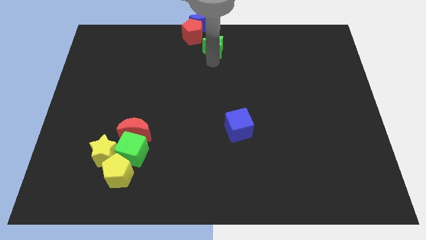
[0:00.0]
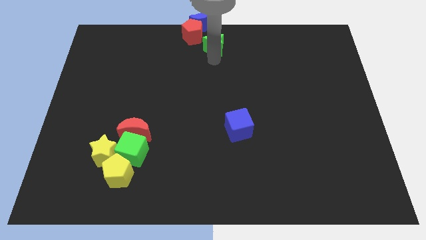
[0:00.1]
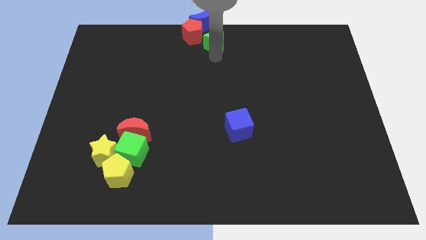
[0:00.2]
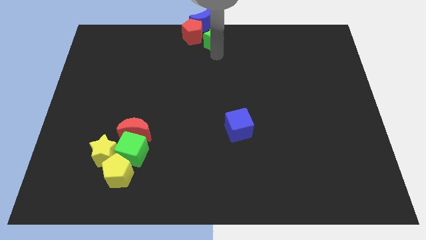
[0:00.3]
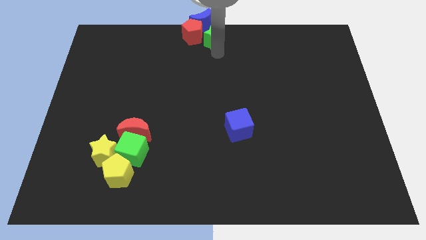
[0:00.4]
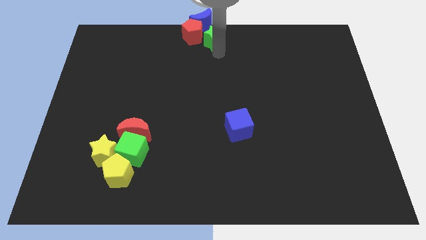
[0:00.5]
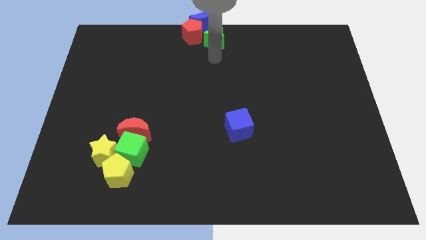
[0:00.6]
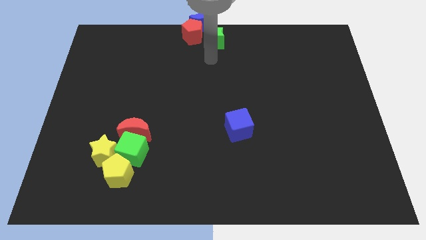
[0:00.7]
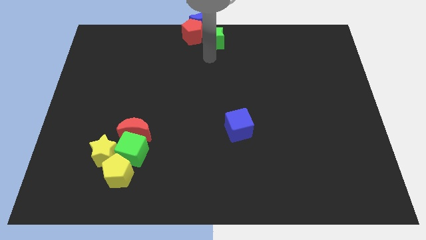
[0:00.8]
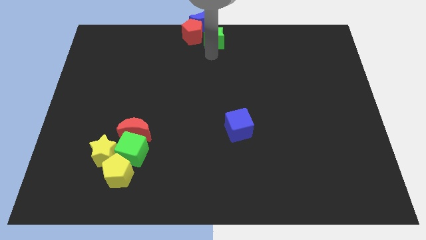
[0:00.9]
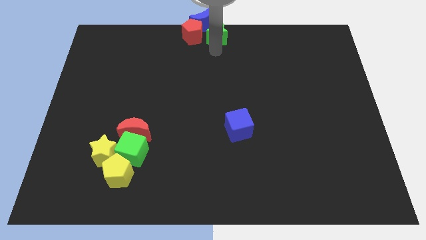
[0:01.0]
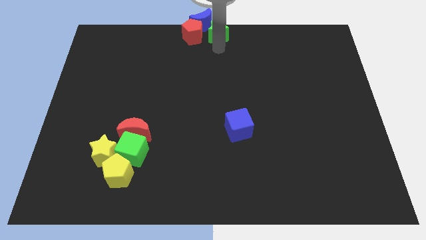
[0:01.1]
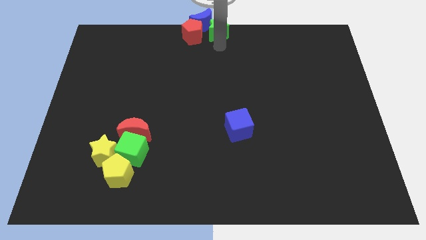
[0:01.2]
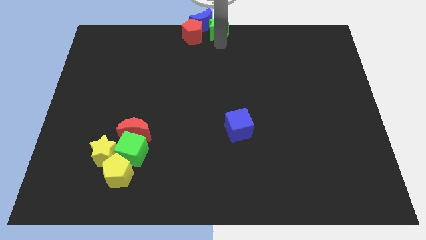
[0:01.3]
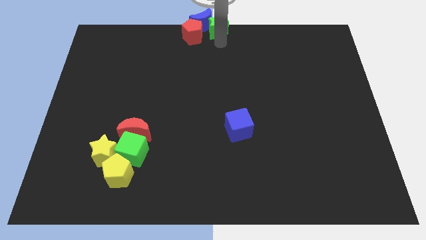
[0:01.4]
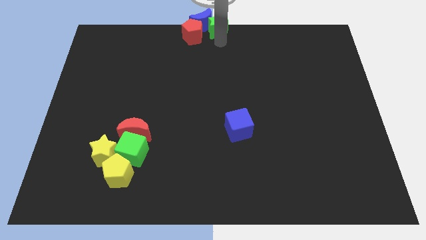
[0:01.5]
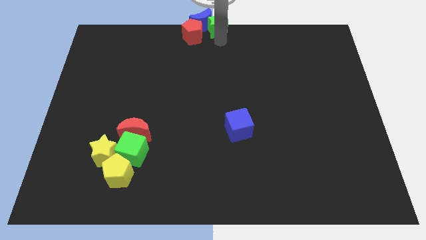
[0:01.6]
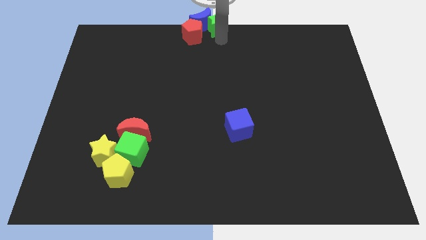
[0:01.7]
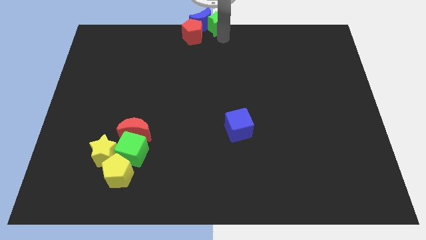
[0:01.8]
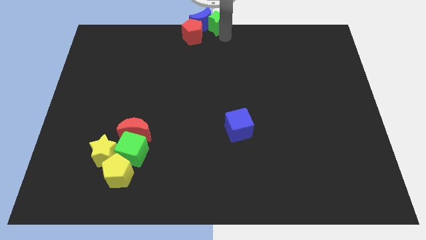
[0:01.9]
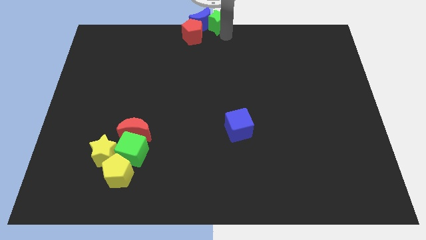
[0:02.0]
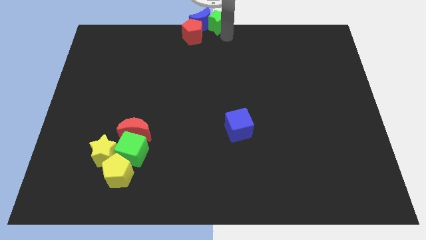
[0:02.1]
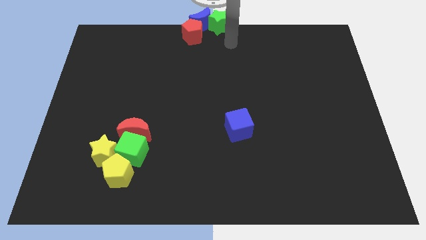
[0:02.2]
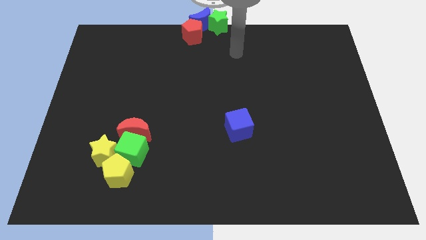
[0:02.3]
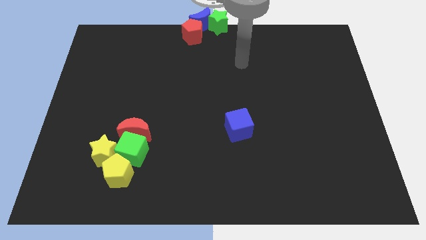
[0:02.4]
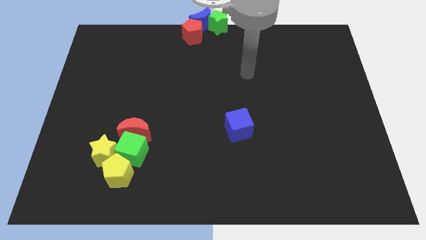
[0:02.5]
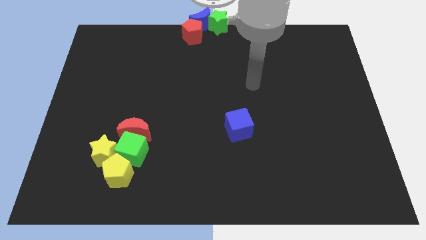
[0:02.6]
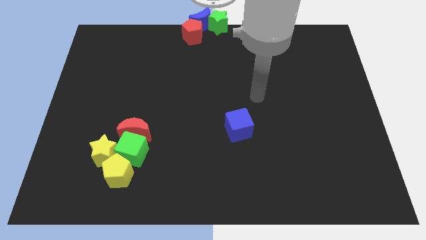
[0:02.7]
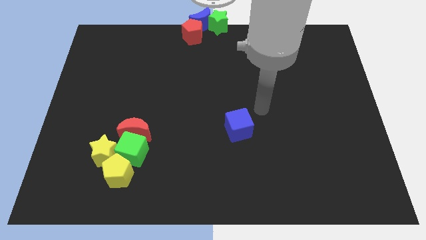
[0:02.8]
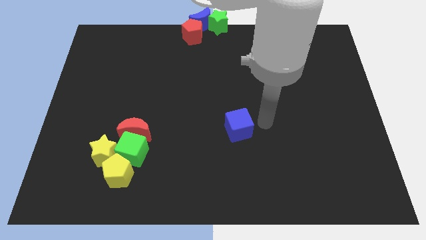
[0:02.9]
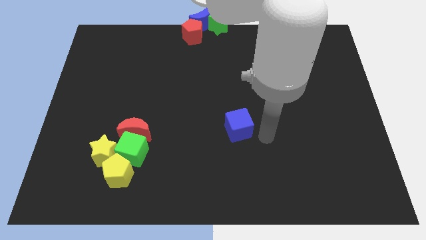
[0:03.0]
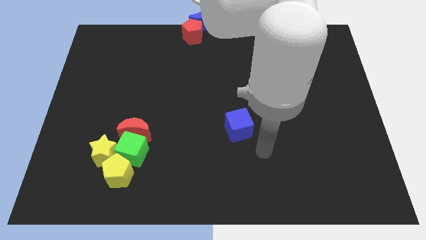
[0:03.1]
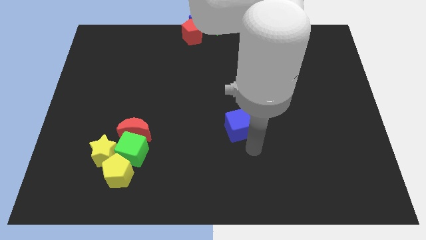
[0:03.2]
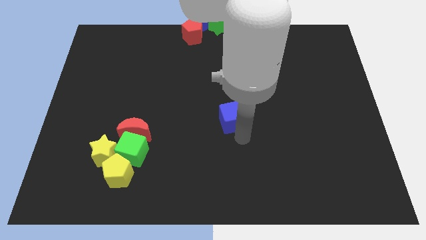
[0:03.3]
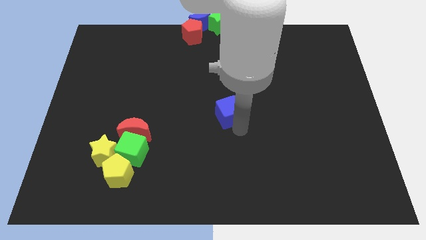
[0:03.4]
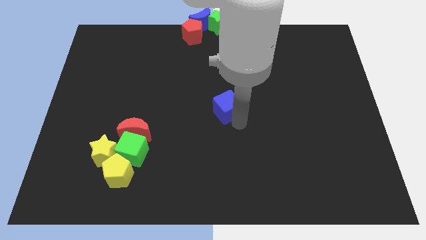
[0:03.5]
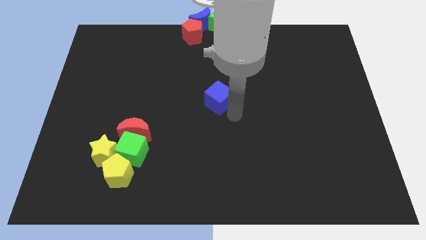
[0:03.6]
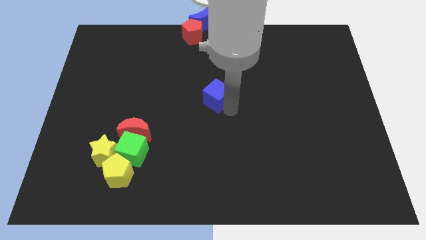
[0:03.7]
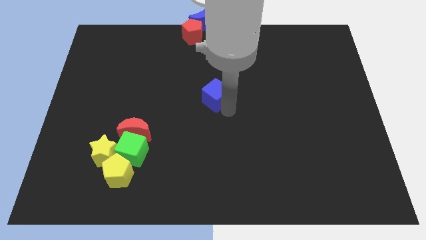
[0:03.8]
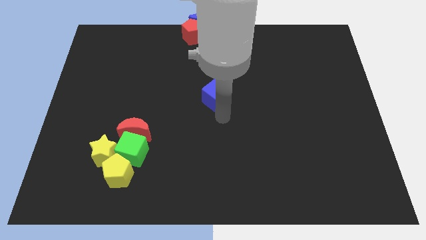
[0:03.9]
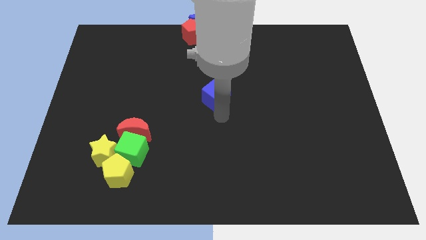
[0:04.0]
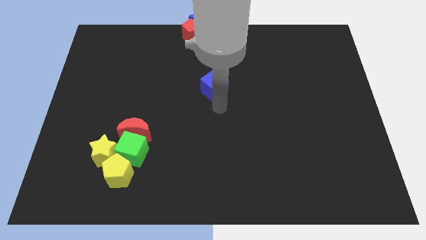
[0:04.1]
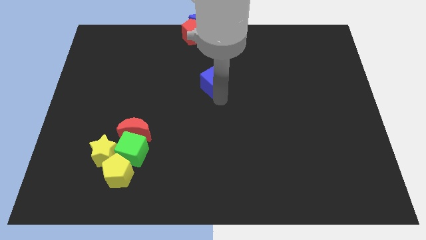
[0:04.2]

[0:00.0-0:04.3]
place the blue cube to the middle of the board

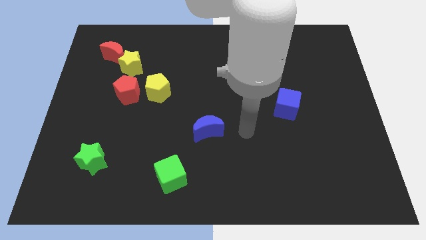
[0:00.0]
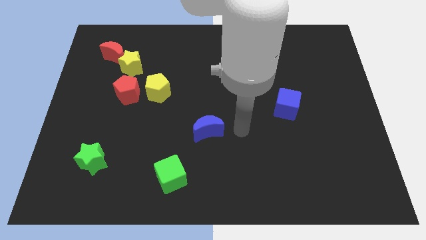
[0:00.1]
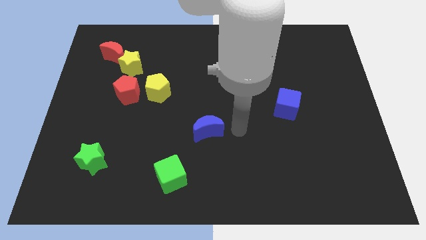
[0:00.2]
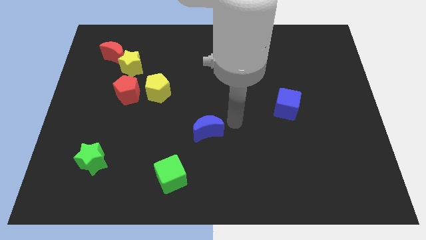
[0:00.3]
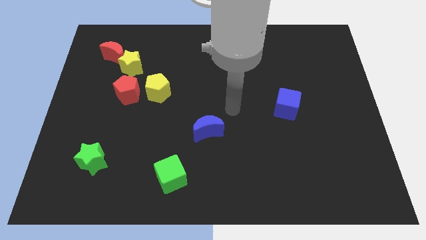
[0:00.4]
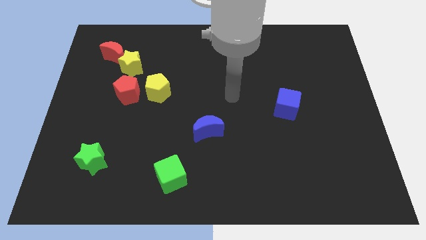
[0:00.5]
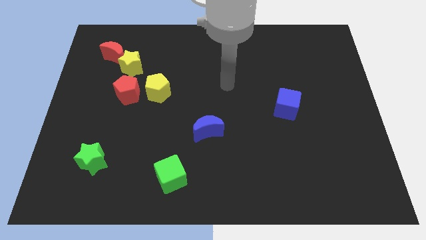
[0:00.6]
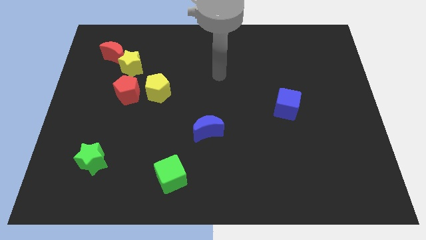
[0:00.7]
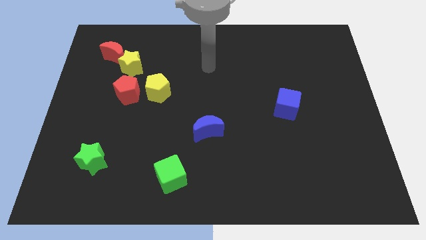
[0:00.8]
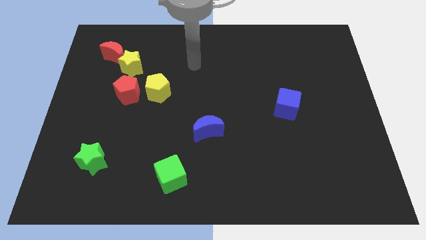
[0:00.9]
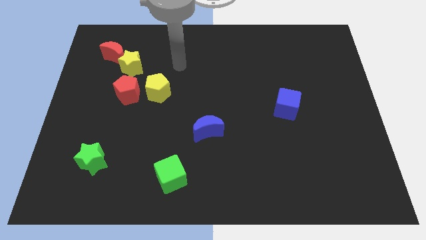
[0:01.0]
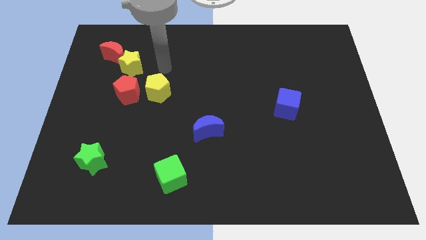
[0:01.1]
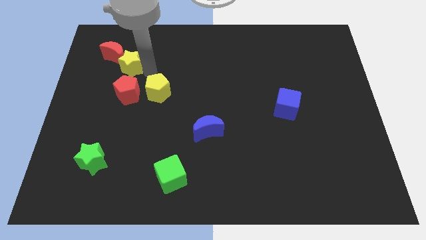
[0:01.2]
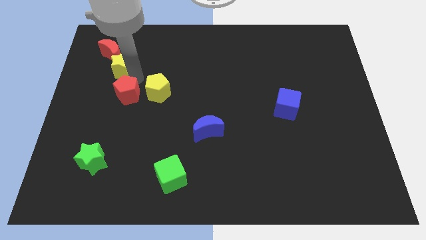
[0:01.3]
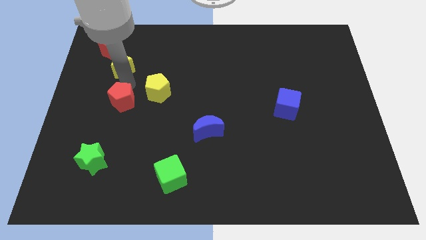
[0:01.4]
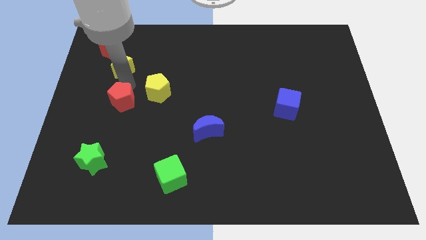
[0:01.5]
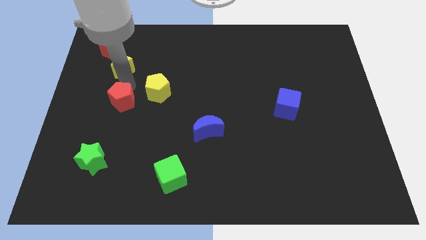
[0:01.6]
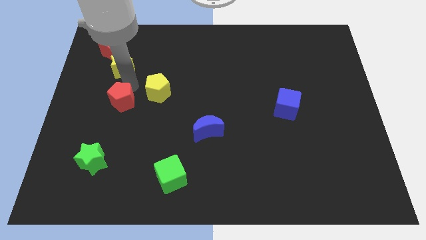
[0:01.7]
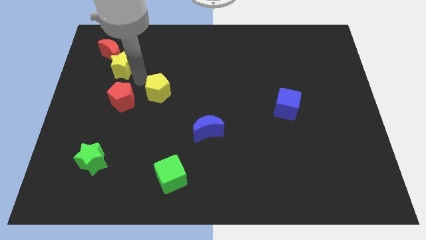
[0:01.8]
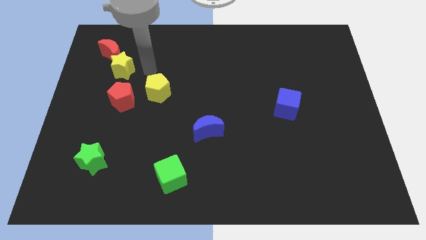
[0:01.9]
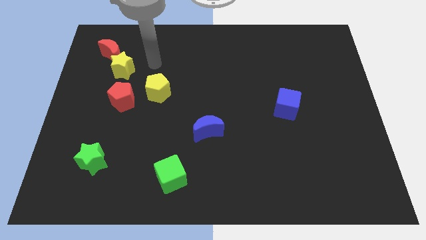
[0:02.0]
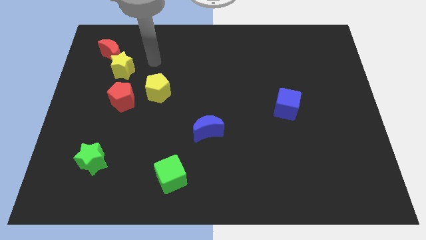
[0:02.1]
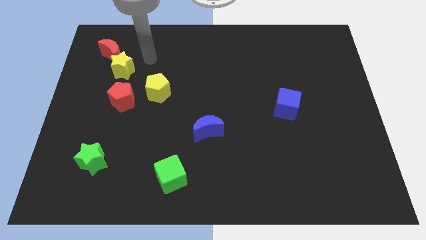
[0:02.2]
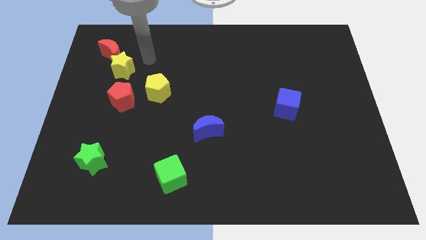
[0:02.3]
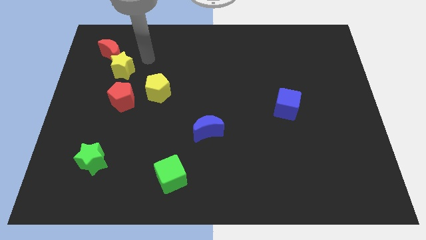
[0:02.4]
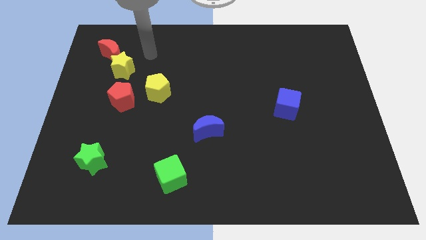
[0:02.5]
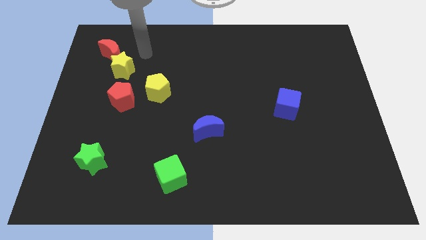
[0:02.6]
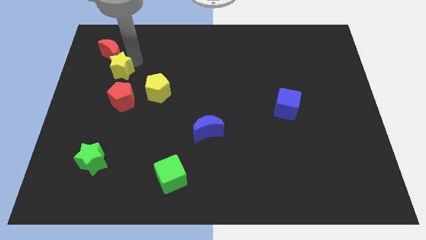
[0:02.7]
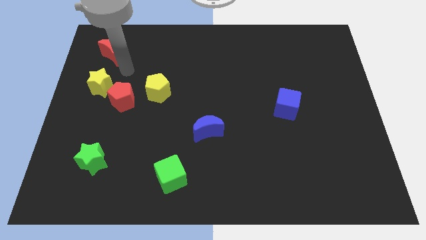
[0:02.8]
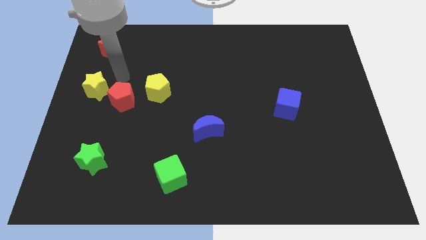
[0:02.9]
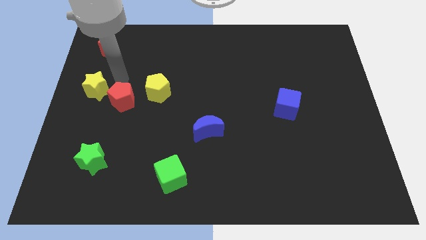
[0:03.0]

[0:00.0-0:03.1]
move the yellow star slightly towards the center left

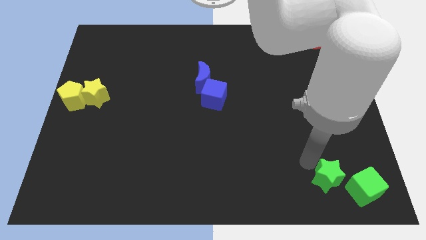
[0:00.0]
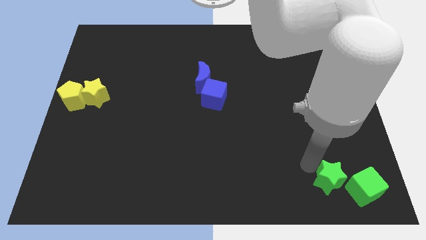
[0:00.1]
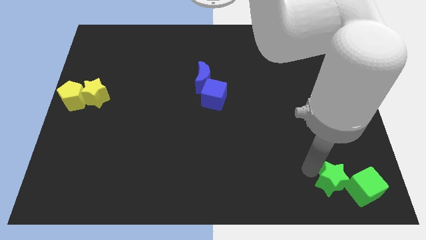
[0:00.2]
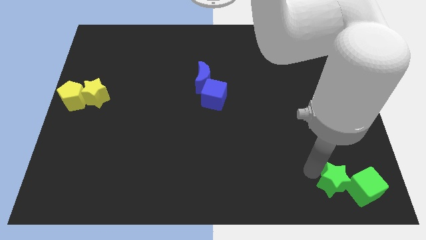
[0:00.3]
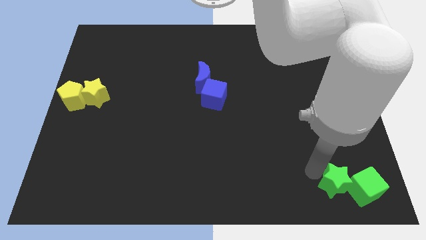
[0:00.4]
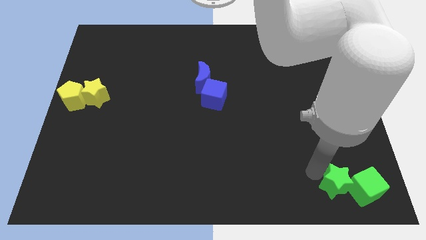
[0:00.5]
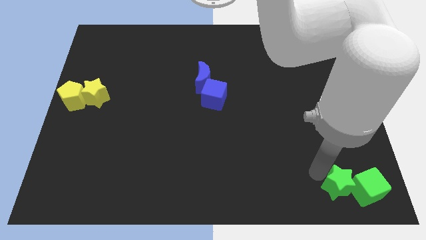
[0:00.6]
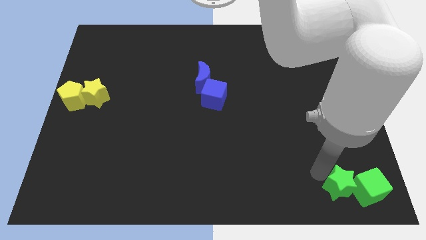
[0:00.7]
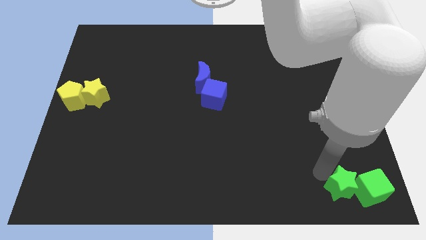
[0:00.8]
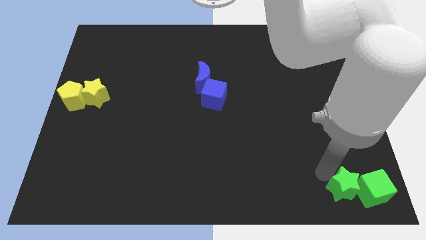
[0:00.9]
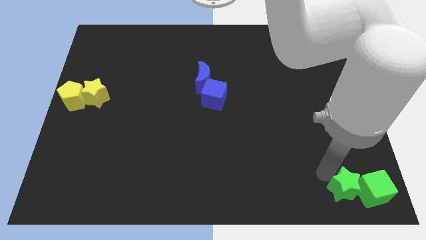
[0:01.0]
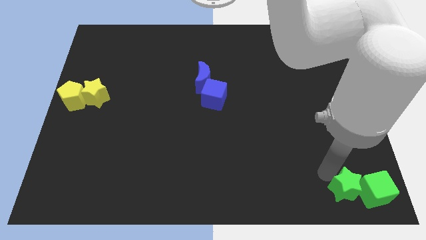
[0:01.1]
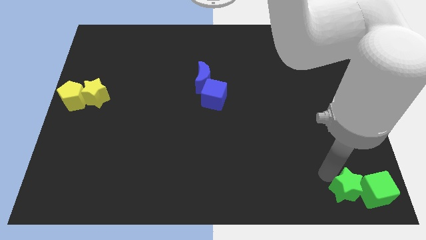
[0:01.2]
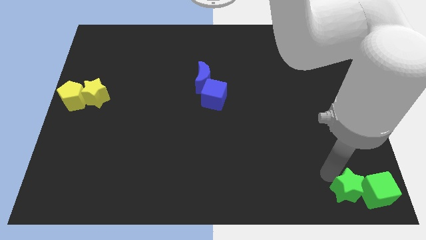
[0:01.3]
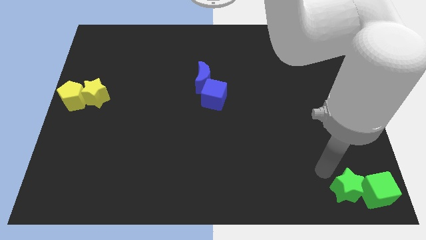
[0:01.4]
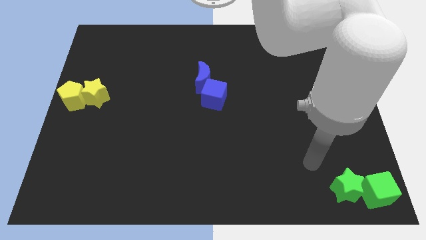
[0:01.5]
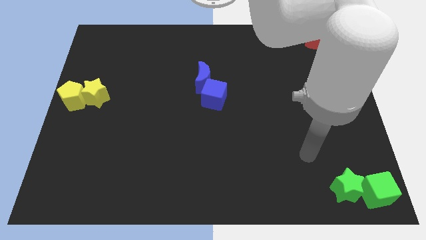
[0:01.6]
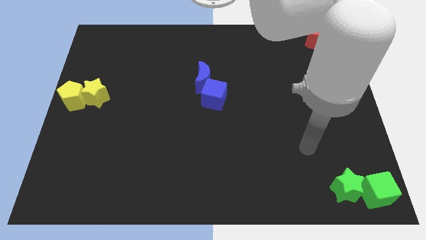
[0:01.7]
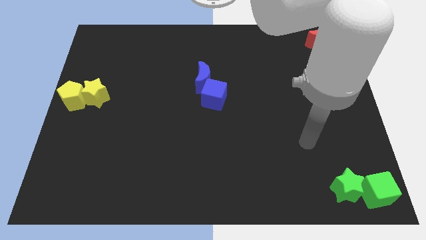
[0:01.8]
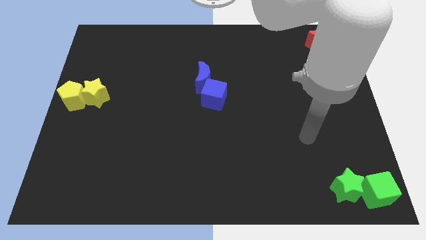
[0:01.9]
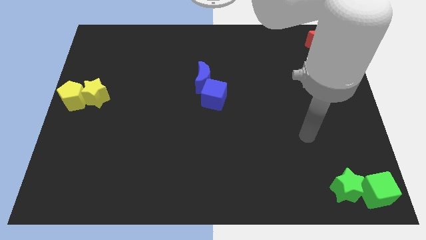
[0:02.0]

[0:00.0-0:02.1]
push the green star into the green cube
